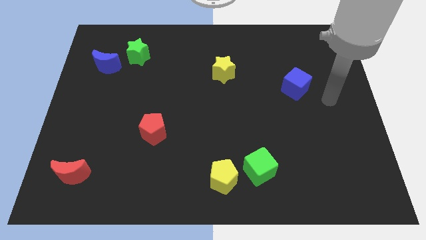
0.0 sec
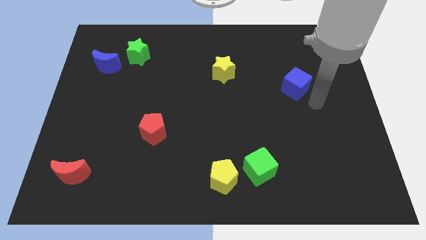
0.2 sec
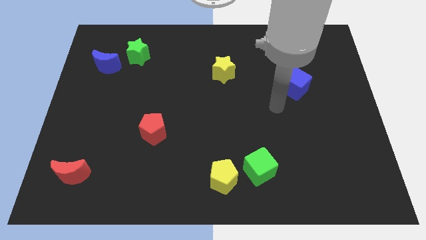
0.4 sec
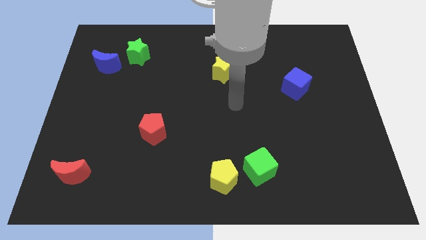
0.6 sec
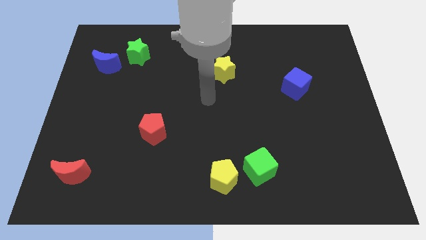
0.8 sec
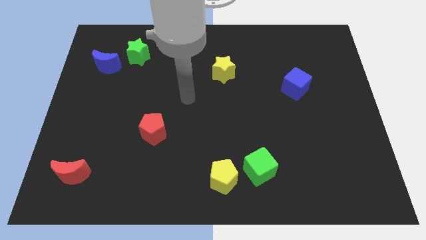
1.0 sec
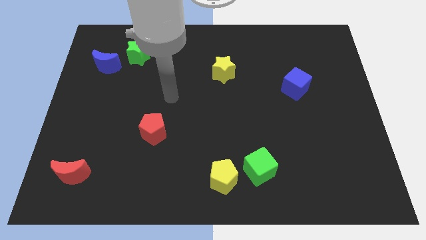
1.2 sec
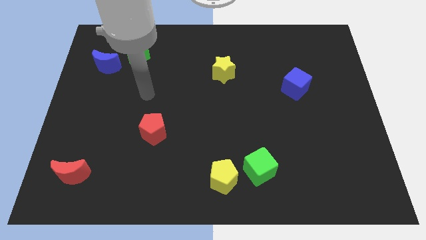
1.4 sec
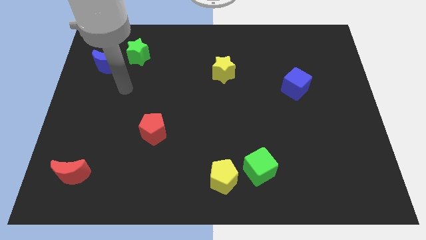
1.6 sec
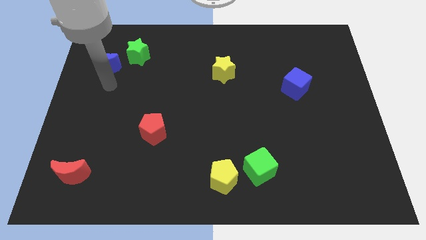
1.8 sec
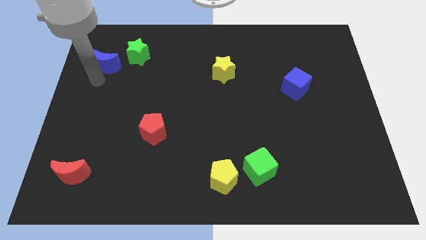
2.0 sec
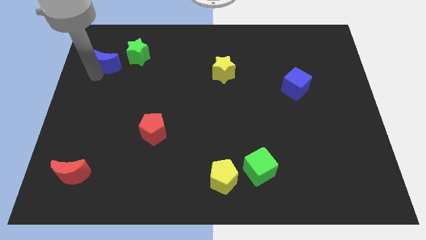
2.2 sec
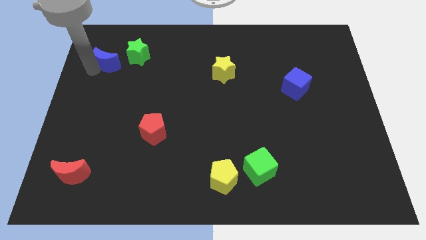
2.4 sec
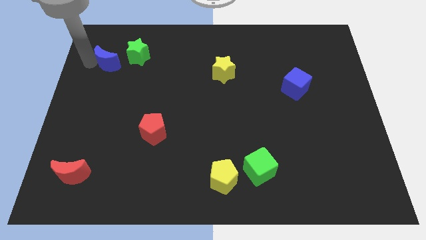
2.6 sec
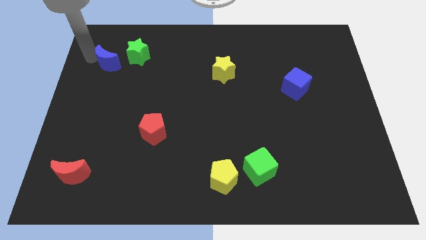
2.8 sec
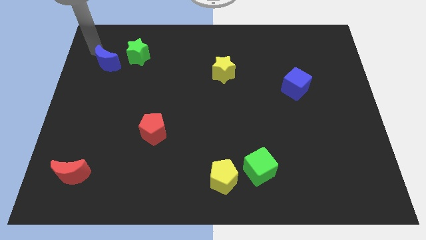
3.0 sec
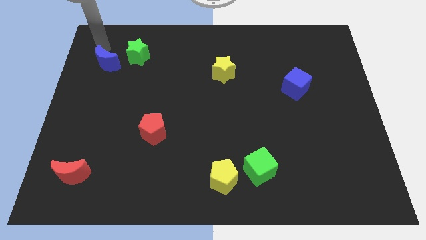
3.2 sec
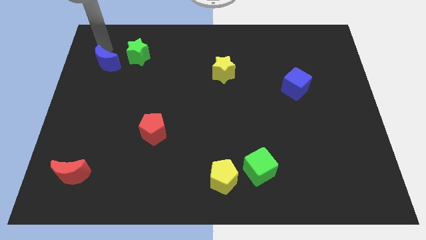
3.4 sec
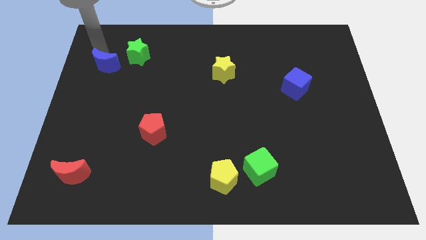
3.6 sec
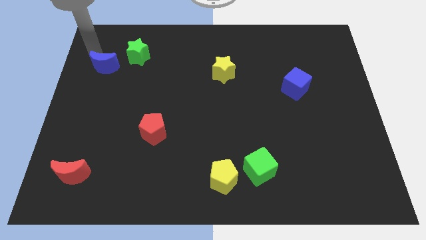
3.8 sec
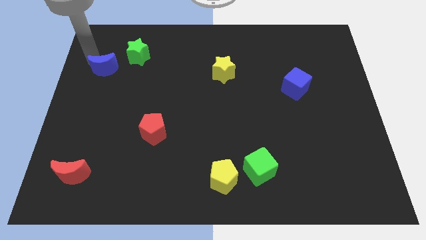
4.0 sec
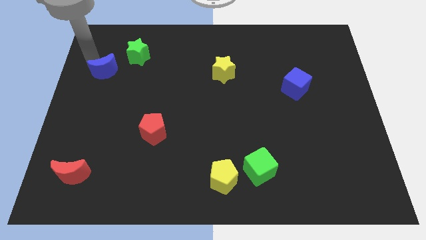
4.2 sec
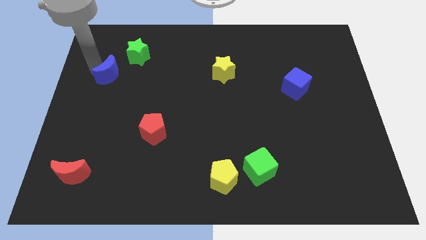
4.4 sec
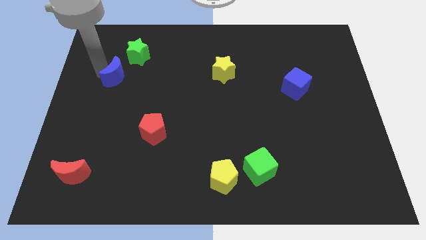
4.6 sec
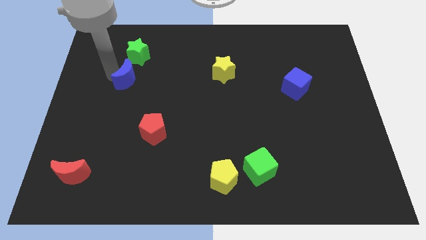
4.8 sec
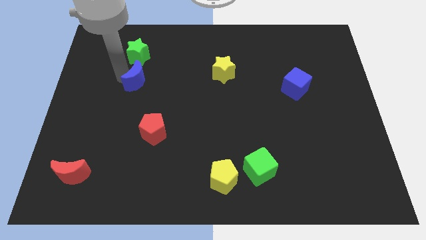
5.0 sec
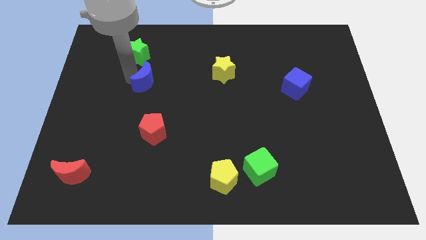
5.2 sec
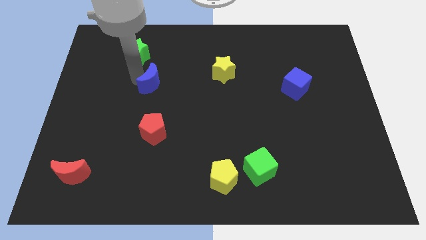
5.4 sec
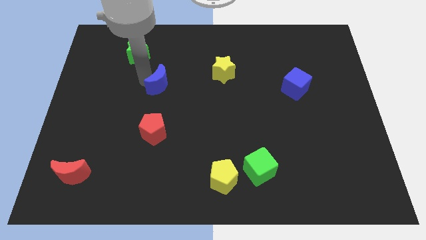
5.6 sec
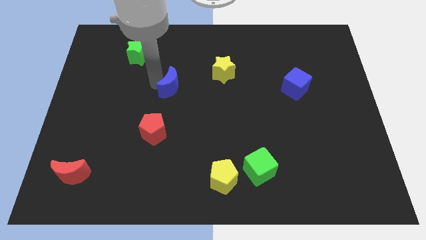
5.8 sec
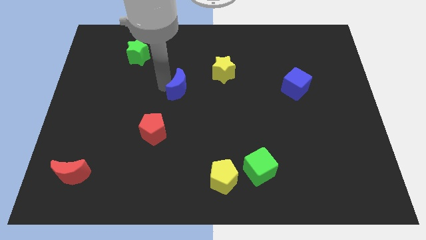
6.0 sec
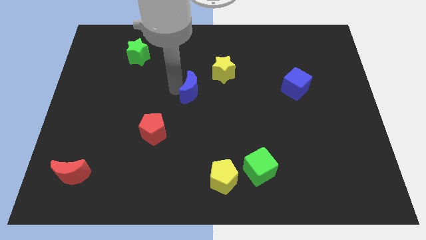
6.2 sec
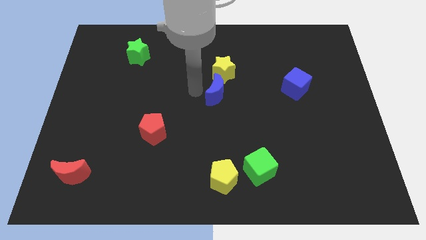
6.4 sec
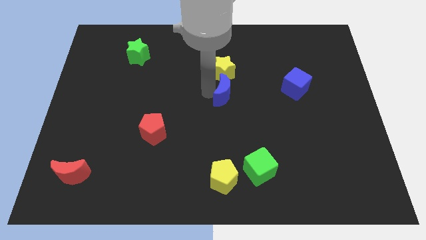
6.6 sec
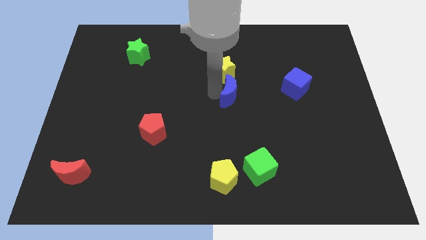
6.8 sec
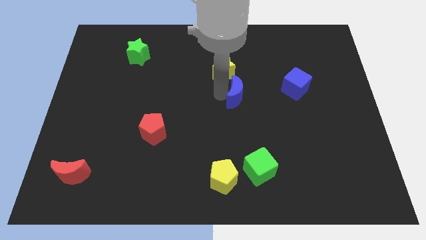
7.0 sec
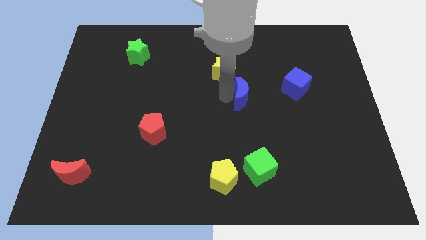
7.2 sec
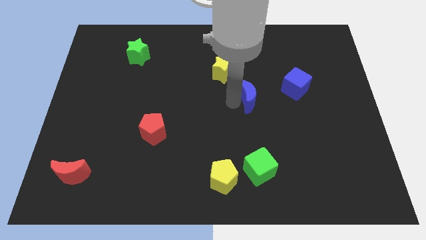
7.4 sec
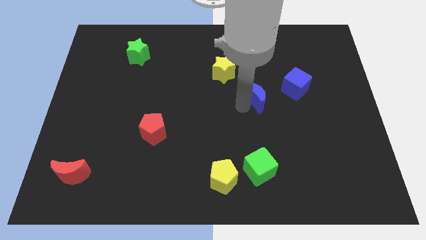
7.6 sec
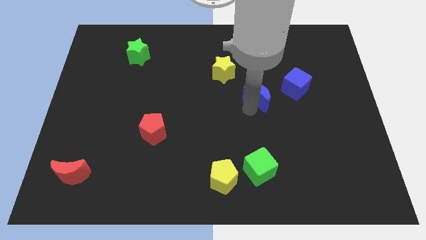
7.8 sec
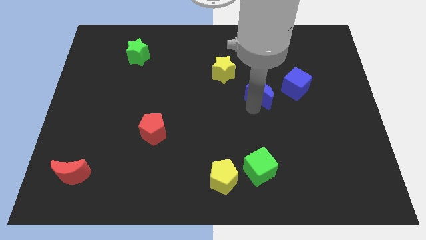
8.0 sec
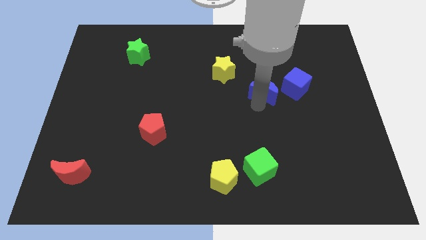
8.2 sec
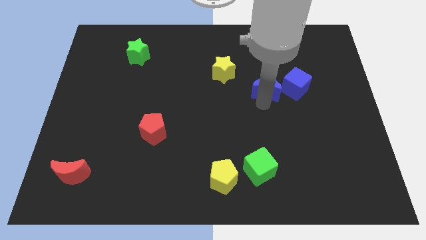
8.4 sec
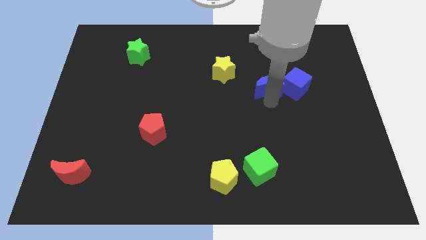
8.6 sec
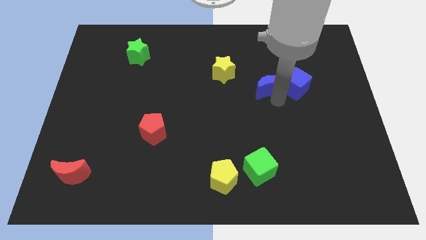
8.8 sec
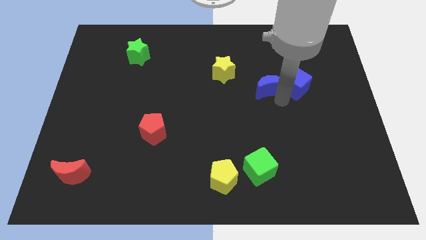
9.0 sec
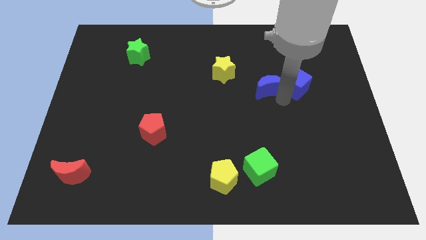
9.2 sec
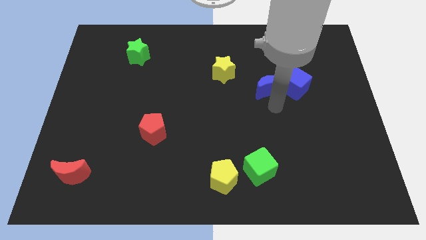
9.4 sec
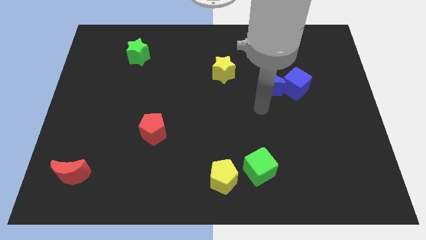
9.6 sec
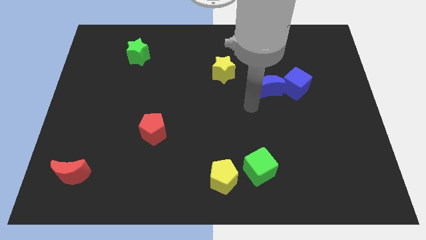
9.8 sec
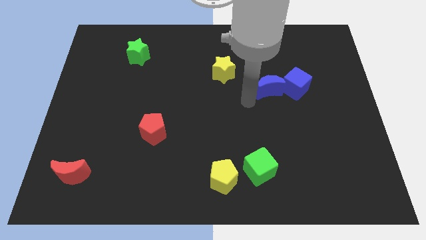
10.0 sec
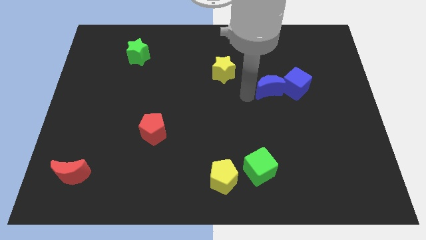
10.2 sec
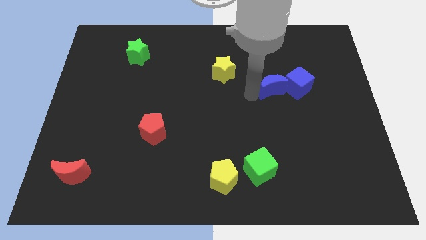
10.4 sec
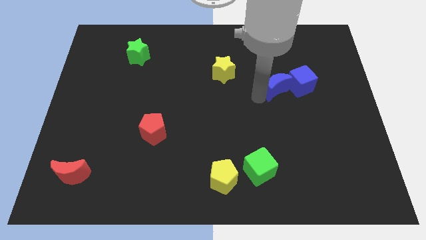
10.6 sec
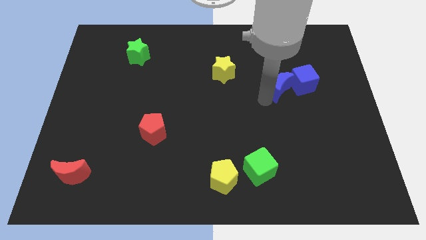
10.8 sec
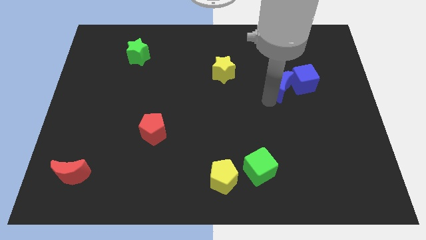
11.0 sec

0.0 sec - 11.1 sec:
put the blue moon next to the blue cube

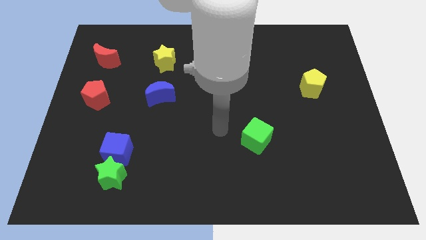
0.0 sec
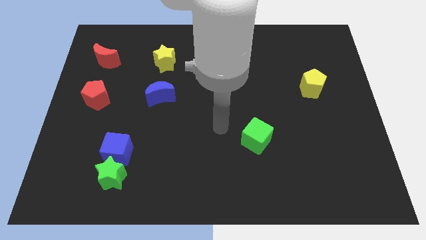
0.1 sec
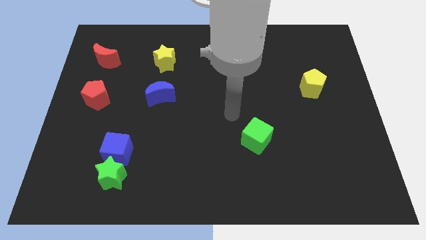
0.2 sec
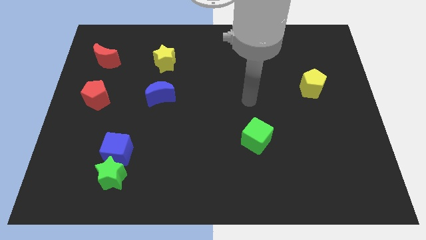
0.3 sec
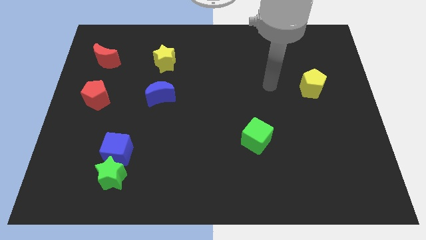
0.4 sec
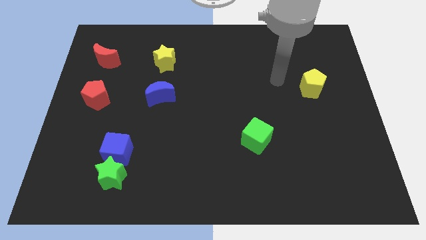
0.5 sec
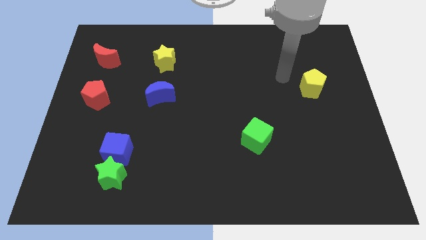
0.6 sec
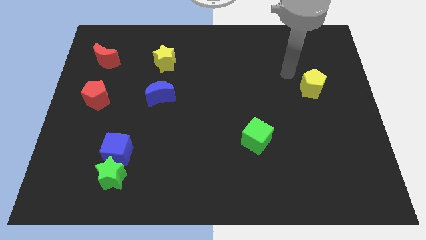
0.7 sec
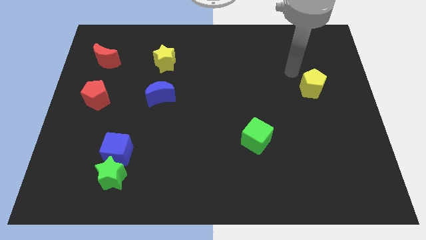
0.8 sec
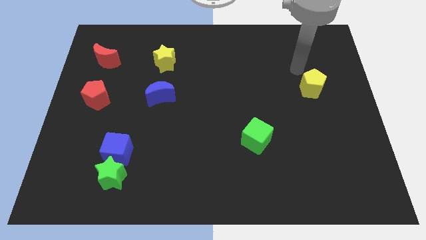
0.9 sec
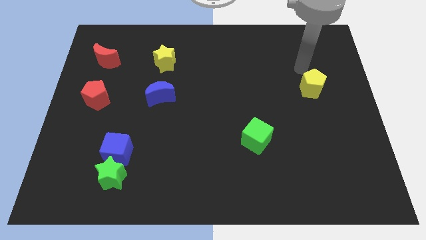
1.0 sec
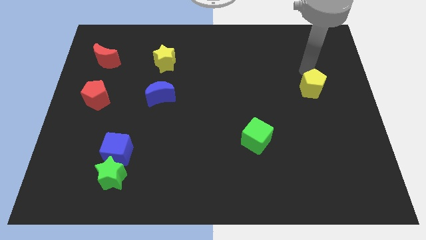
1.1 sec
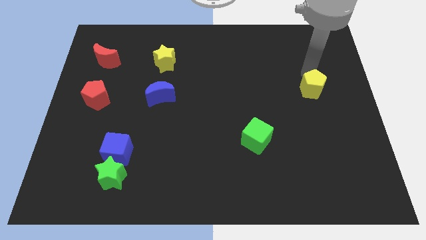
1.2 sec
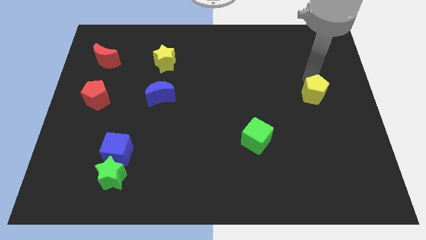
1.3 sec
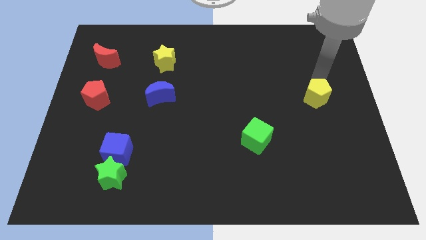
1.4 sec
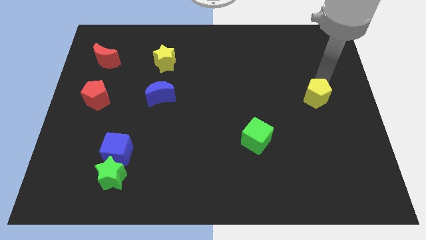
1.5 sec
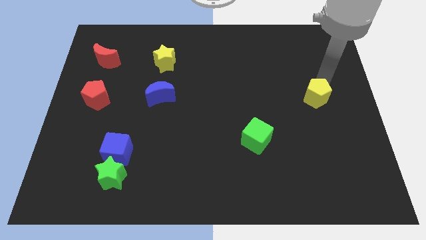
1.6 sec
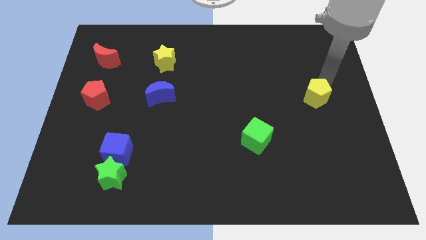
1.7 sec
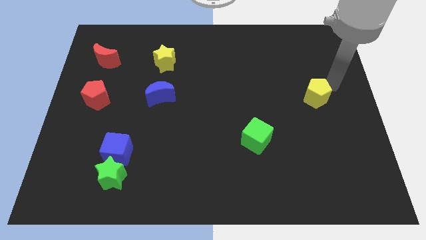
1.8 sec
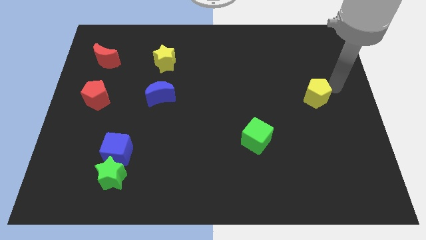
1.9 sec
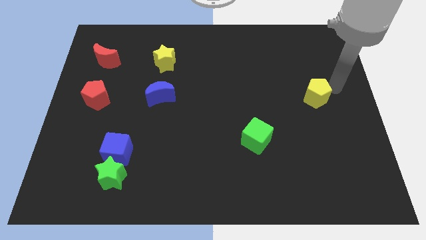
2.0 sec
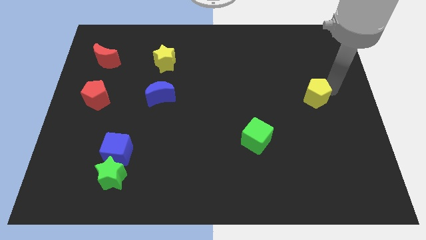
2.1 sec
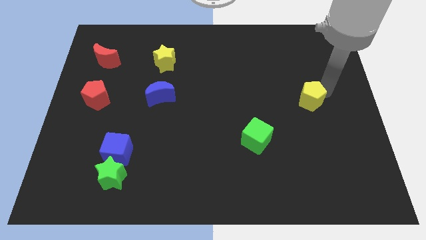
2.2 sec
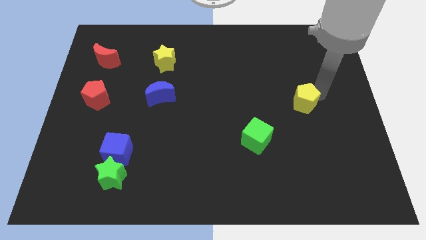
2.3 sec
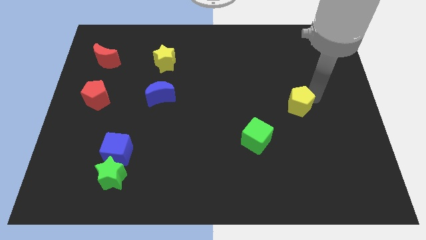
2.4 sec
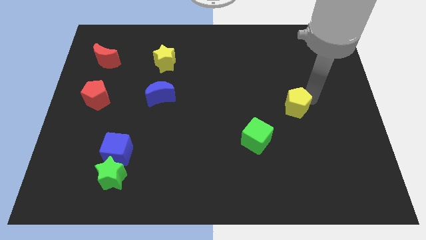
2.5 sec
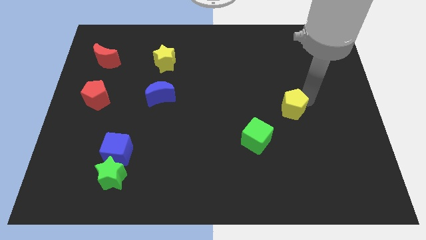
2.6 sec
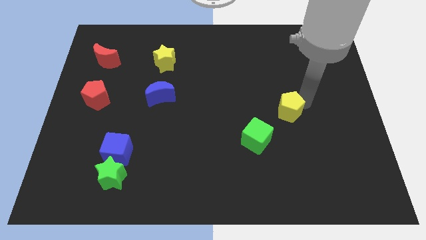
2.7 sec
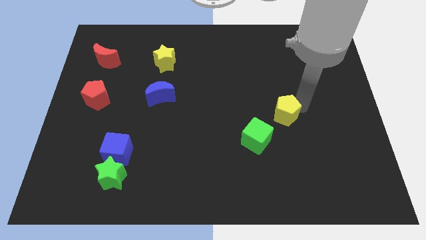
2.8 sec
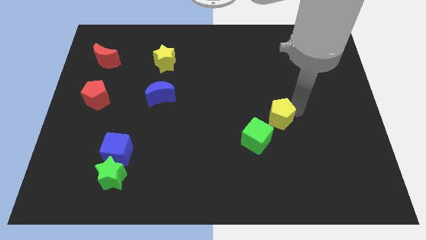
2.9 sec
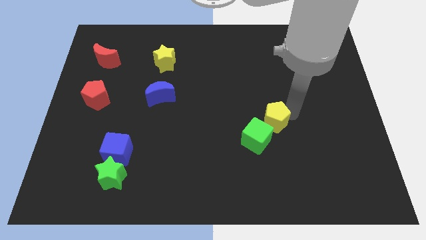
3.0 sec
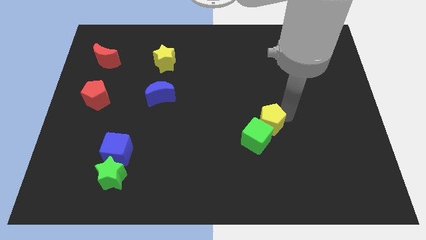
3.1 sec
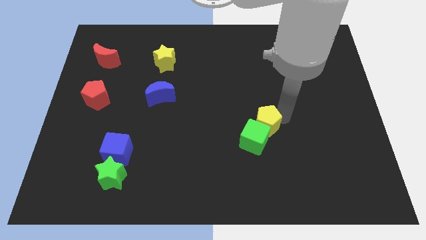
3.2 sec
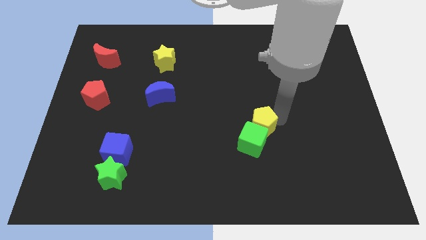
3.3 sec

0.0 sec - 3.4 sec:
slide the yellow pentagon close to the green cube
